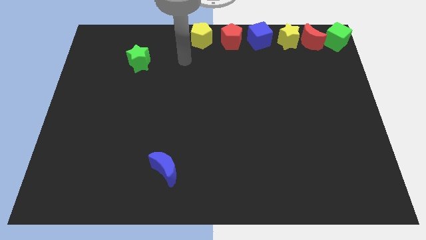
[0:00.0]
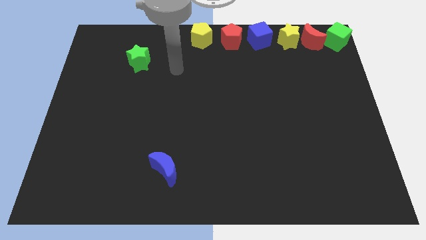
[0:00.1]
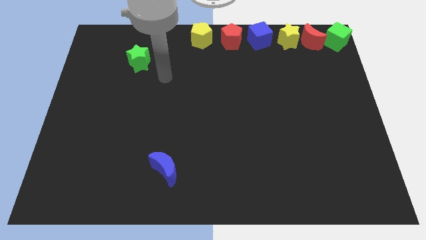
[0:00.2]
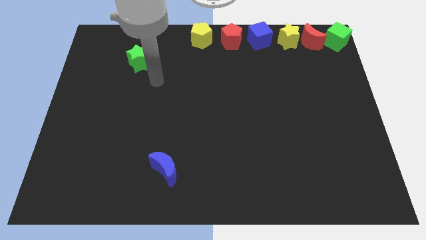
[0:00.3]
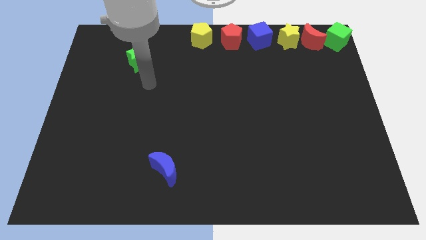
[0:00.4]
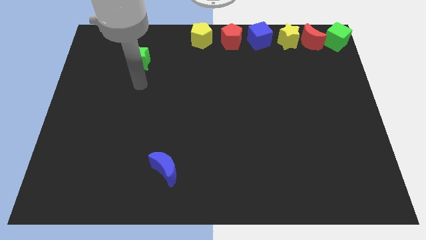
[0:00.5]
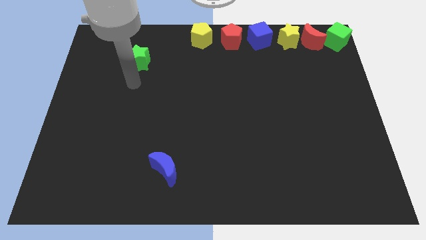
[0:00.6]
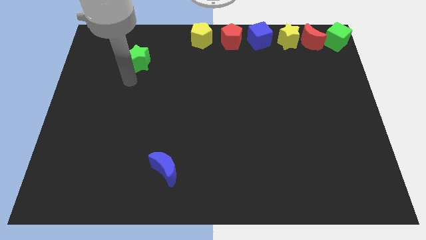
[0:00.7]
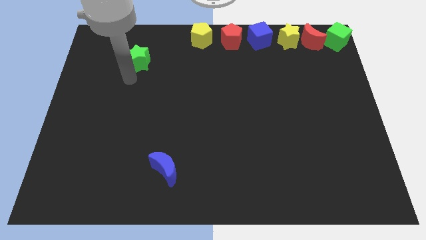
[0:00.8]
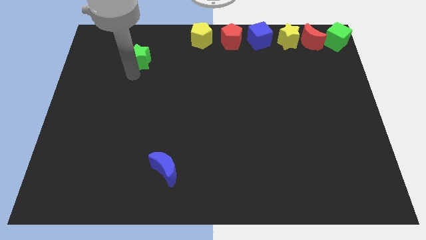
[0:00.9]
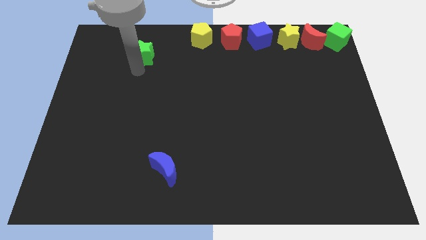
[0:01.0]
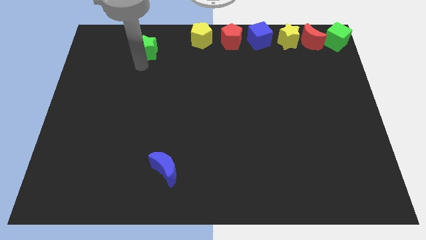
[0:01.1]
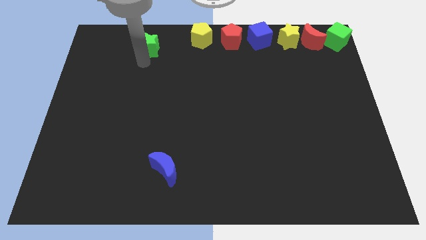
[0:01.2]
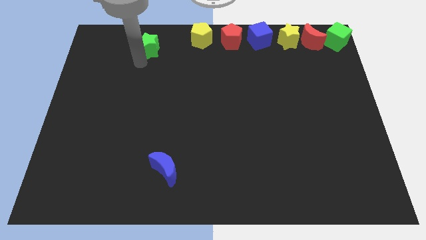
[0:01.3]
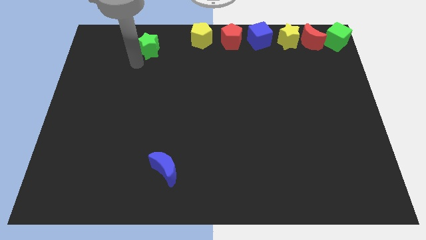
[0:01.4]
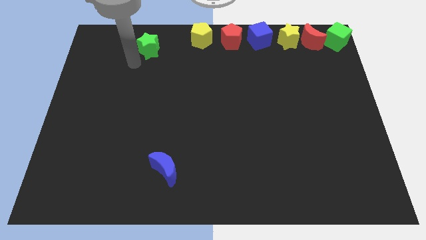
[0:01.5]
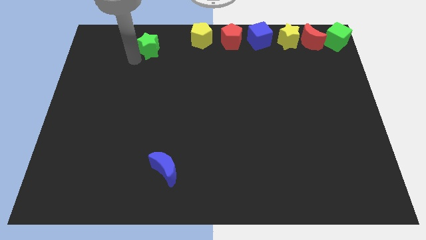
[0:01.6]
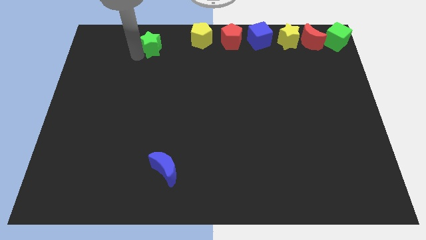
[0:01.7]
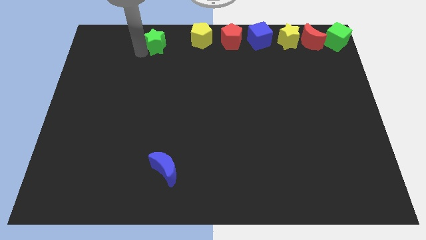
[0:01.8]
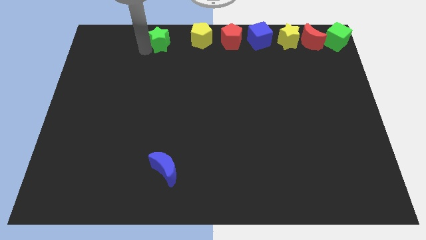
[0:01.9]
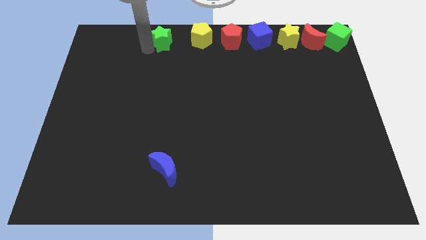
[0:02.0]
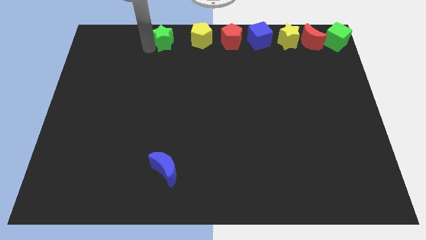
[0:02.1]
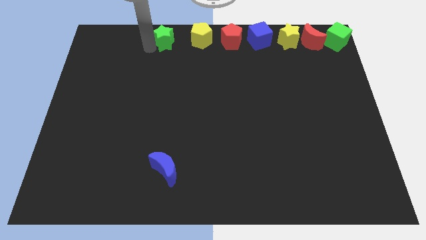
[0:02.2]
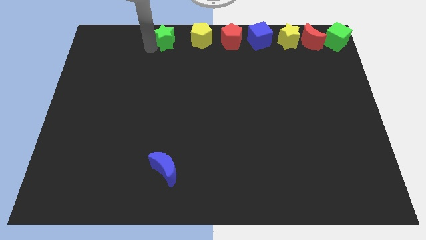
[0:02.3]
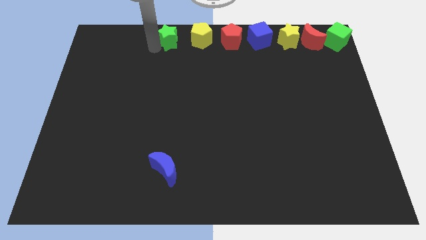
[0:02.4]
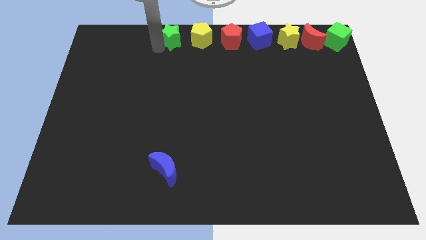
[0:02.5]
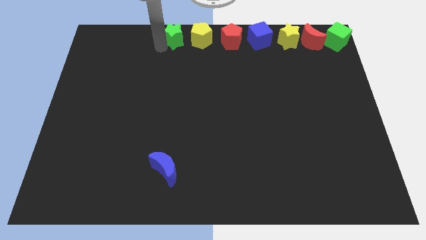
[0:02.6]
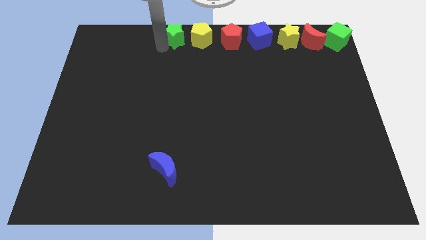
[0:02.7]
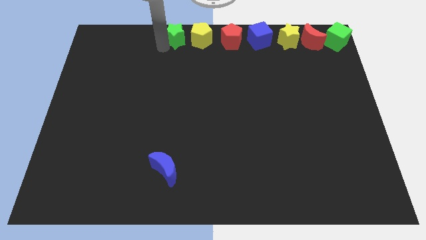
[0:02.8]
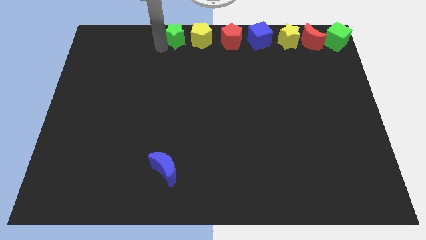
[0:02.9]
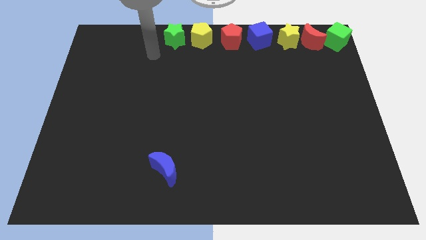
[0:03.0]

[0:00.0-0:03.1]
slide the green star left of the yellow pentagon

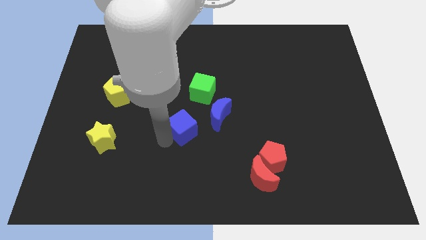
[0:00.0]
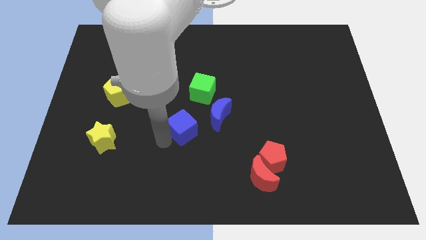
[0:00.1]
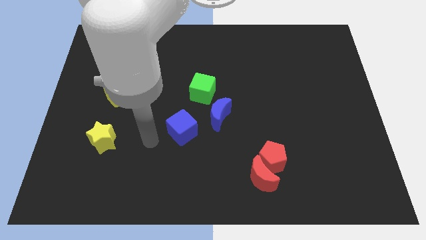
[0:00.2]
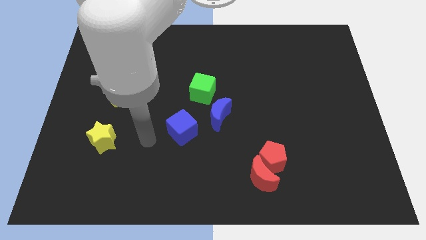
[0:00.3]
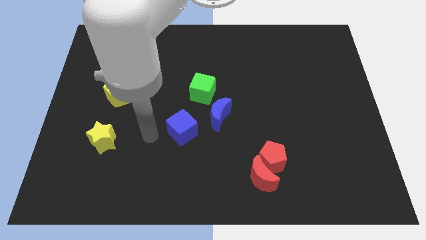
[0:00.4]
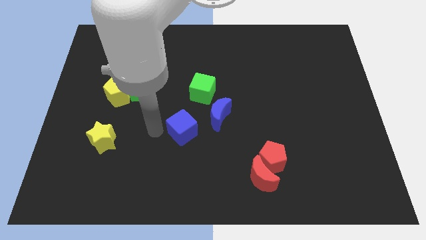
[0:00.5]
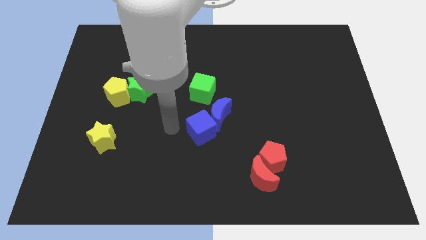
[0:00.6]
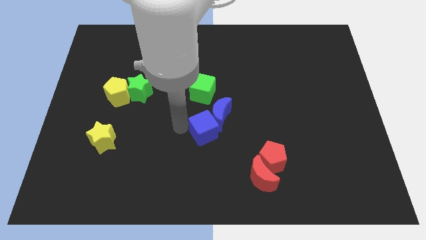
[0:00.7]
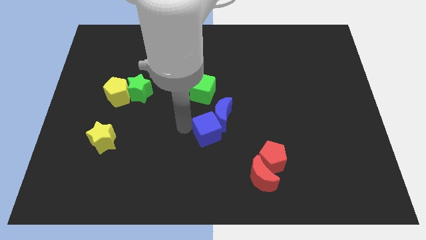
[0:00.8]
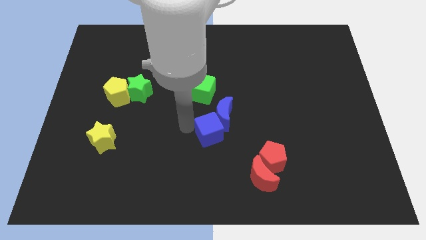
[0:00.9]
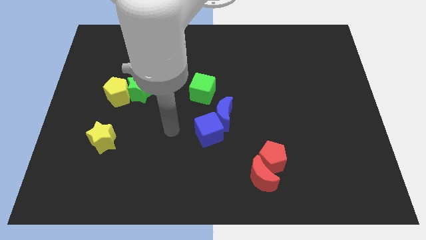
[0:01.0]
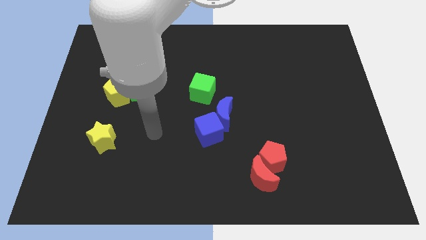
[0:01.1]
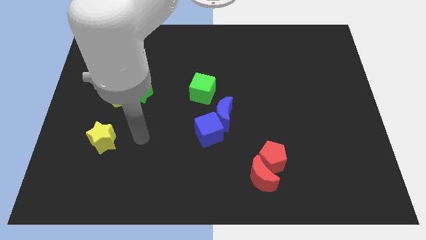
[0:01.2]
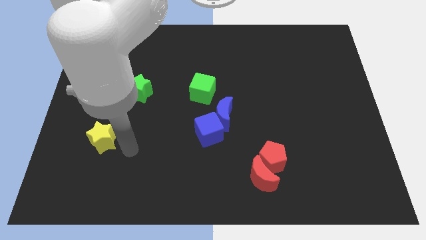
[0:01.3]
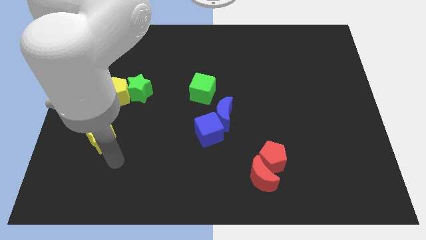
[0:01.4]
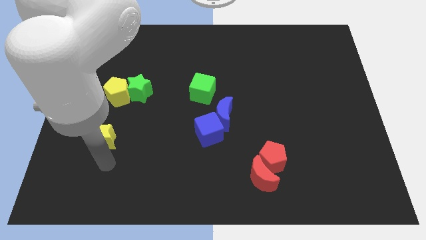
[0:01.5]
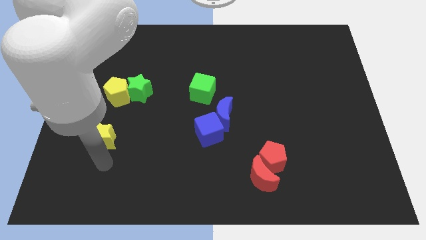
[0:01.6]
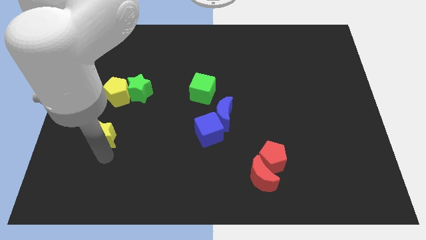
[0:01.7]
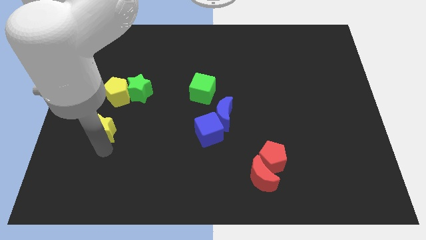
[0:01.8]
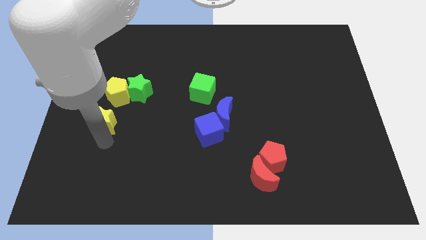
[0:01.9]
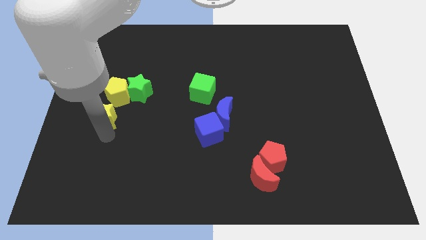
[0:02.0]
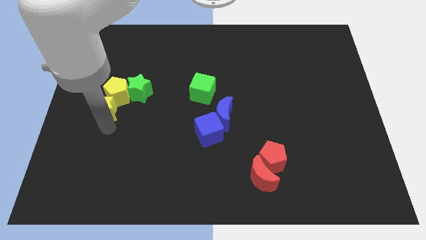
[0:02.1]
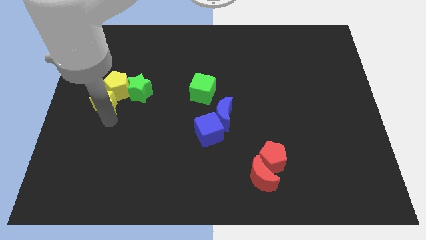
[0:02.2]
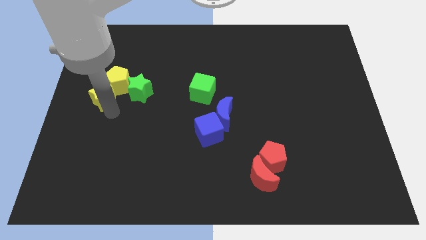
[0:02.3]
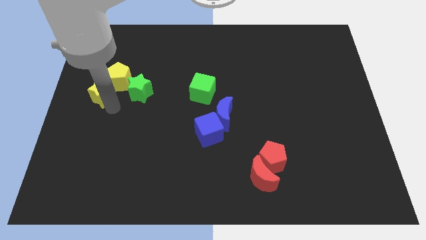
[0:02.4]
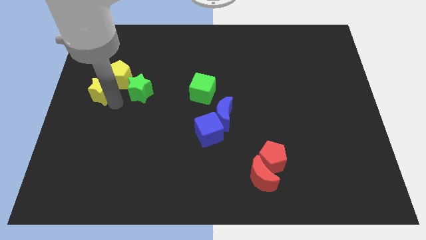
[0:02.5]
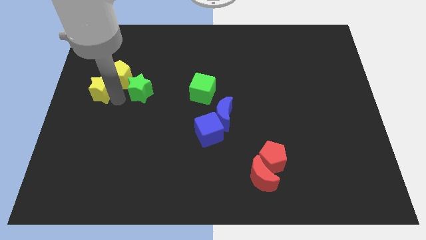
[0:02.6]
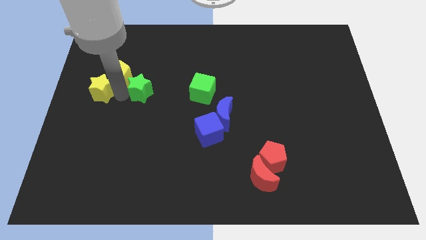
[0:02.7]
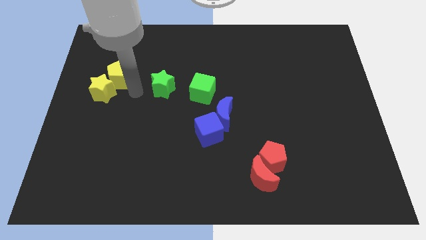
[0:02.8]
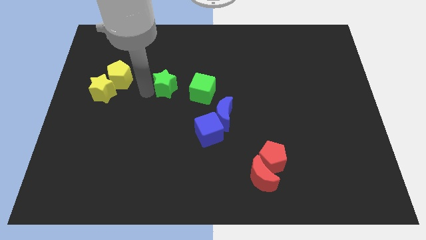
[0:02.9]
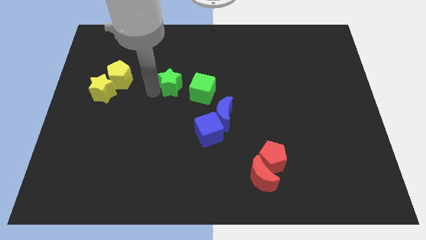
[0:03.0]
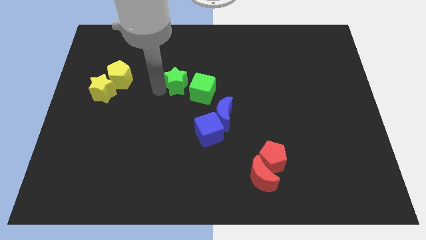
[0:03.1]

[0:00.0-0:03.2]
move green star close to green cube

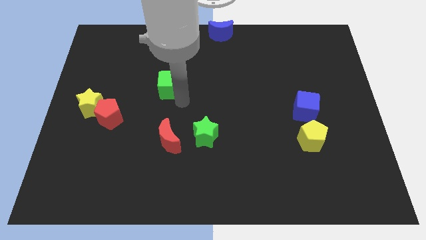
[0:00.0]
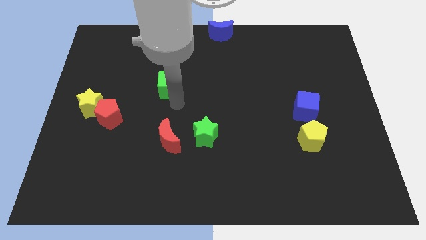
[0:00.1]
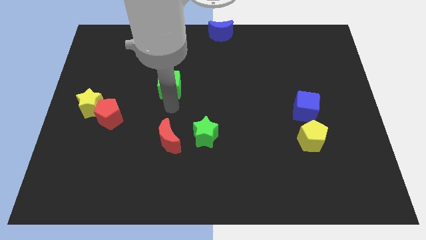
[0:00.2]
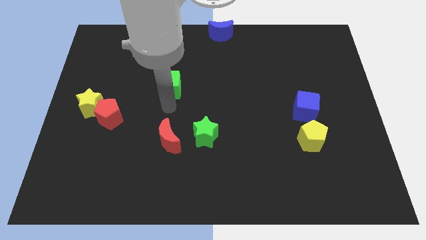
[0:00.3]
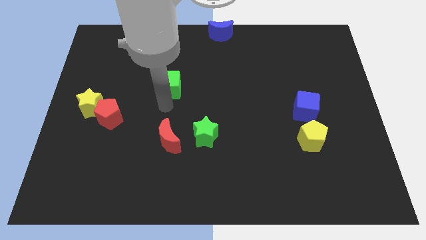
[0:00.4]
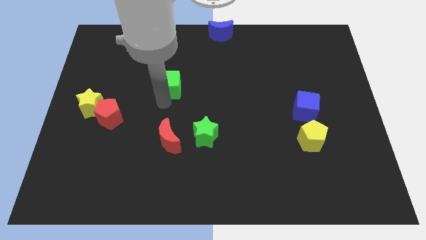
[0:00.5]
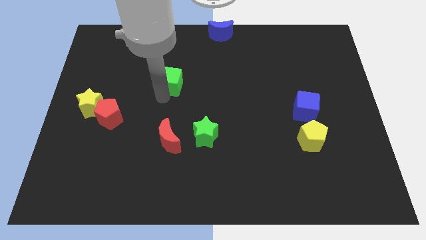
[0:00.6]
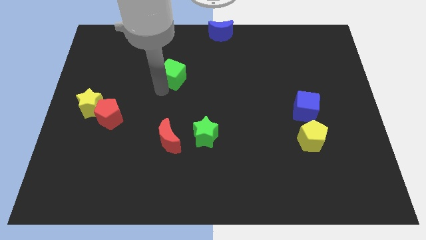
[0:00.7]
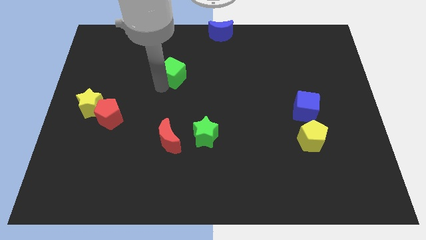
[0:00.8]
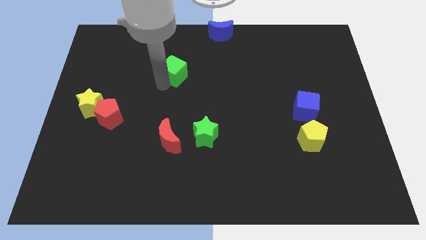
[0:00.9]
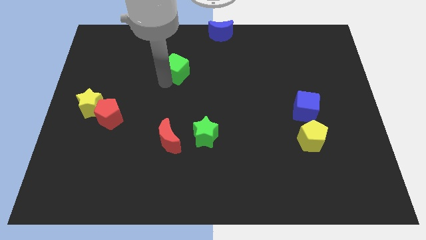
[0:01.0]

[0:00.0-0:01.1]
push green cube slightly upwards

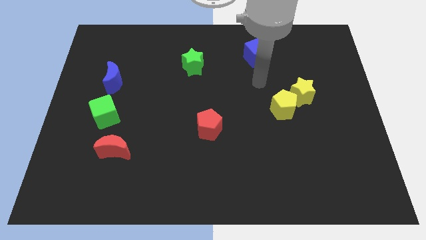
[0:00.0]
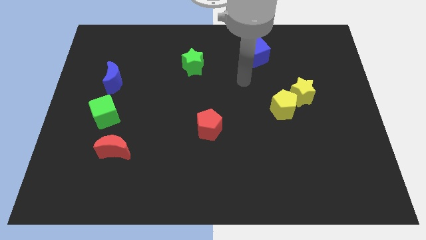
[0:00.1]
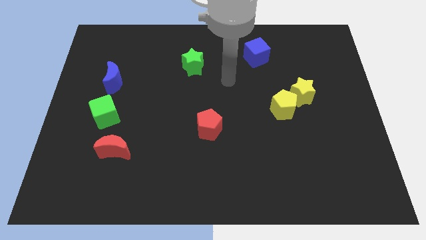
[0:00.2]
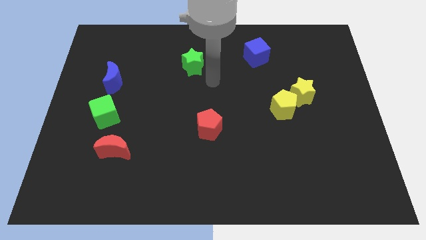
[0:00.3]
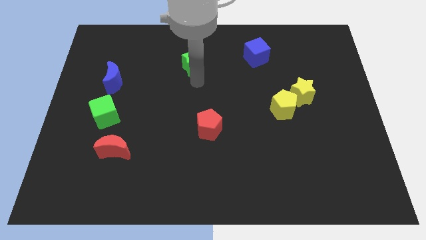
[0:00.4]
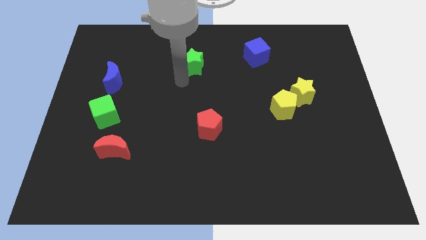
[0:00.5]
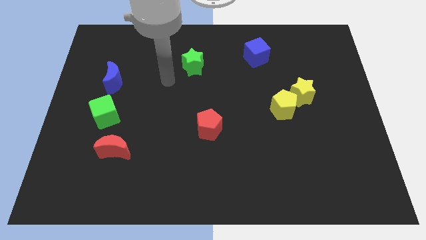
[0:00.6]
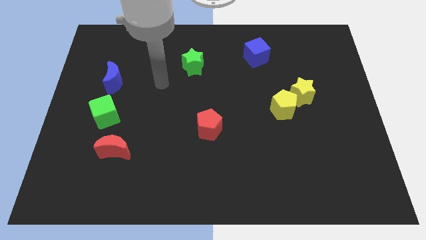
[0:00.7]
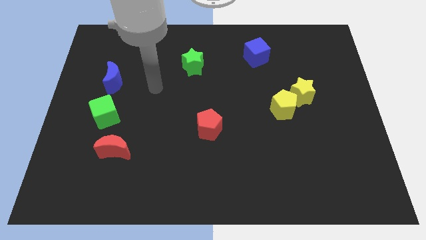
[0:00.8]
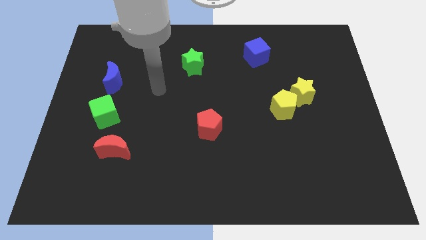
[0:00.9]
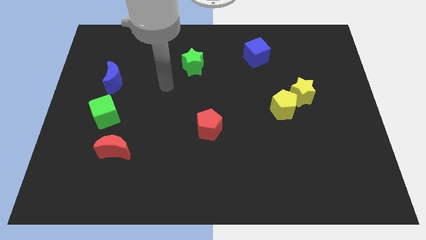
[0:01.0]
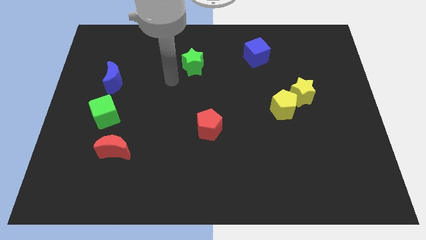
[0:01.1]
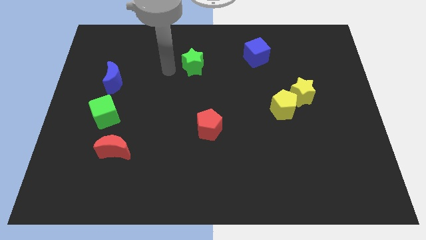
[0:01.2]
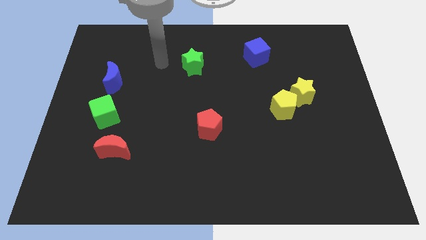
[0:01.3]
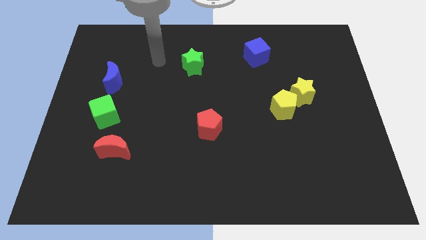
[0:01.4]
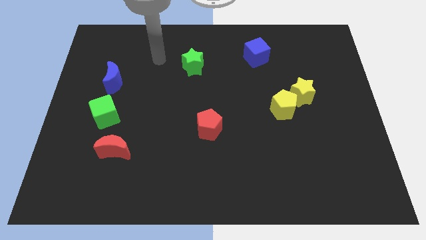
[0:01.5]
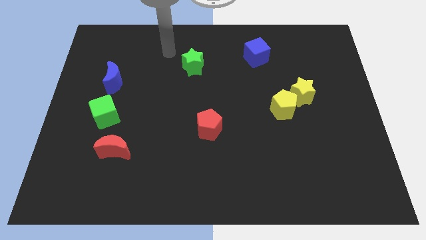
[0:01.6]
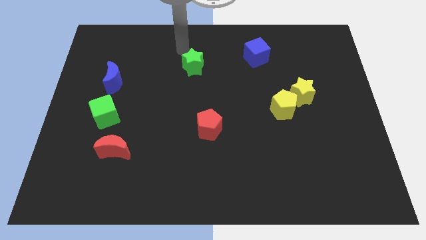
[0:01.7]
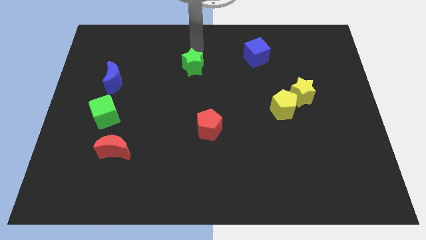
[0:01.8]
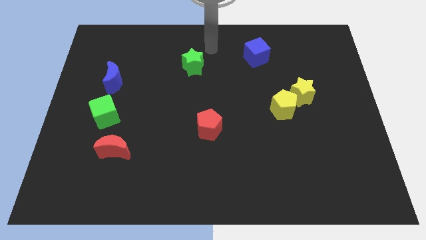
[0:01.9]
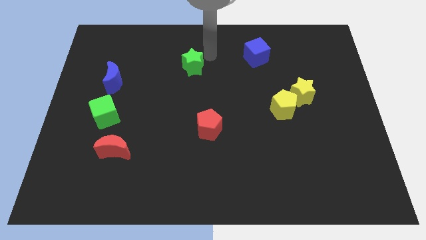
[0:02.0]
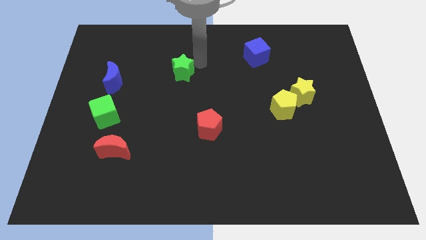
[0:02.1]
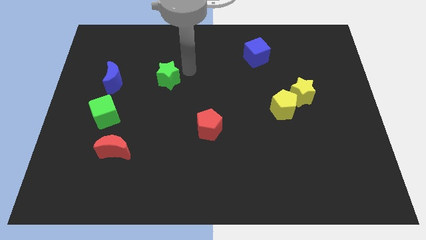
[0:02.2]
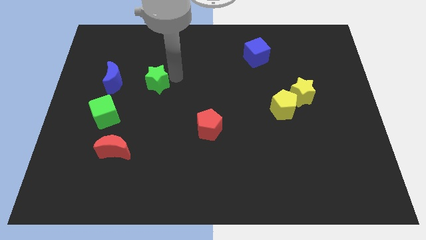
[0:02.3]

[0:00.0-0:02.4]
push the green star towards green cube
